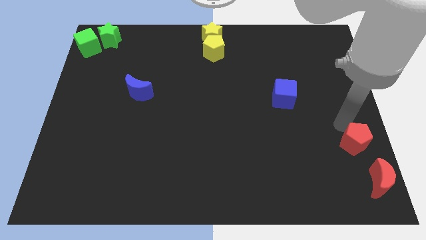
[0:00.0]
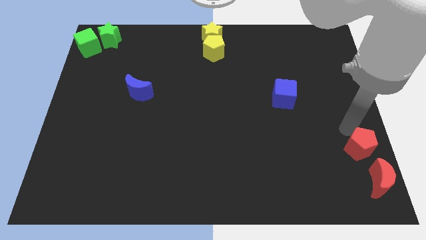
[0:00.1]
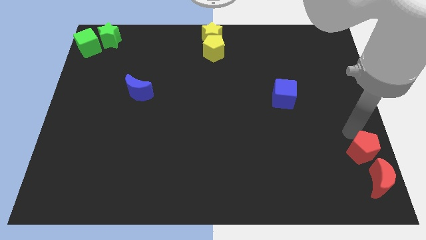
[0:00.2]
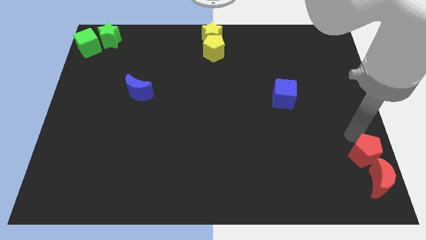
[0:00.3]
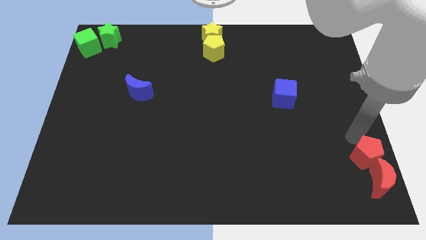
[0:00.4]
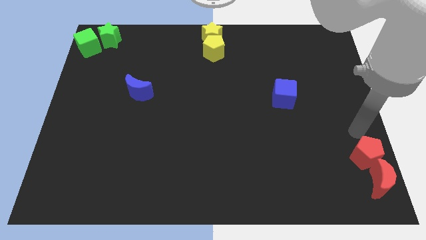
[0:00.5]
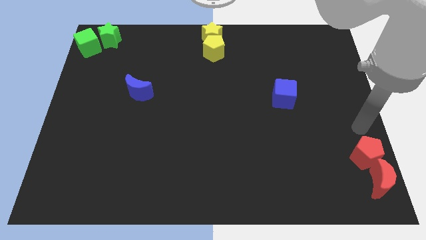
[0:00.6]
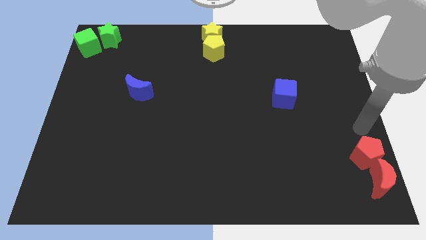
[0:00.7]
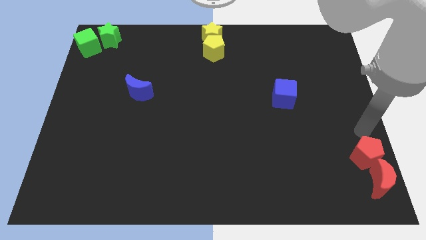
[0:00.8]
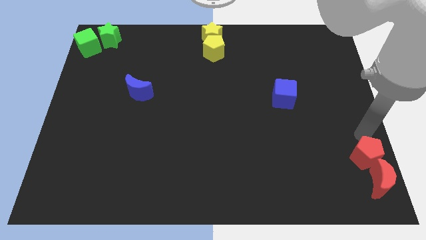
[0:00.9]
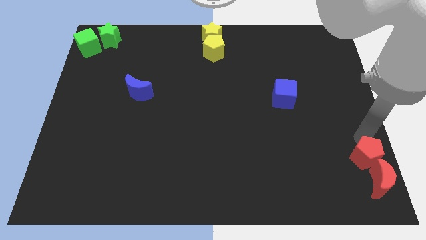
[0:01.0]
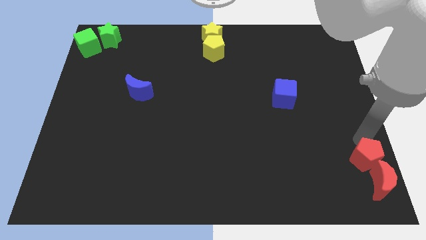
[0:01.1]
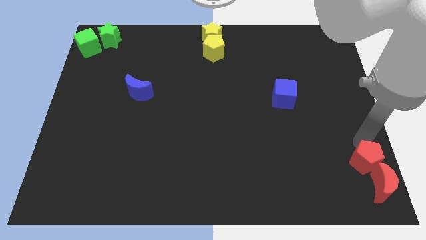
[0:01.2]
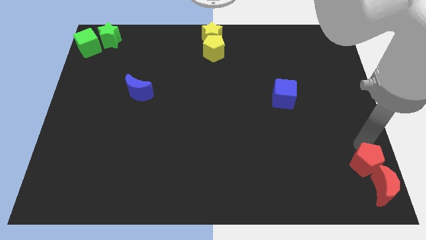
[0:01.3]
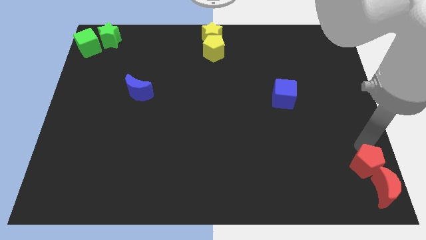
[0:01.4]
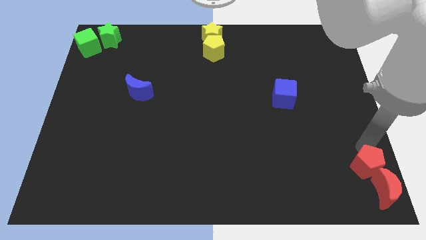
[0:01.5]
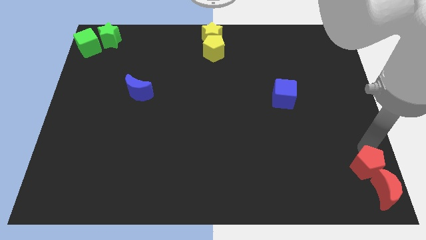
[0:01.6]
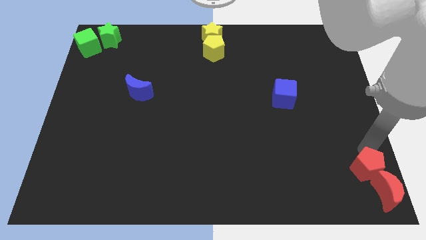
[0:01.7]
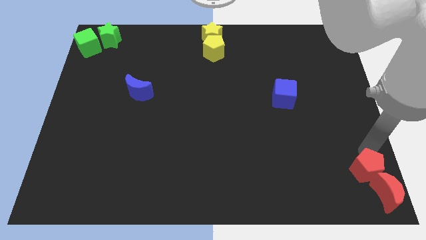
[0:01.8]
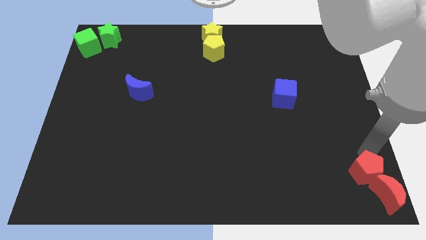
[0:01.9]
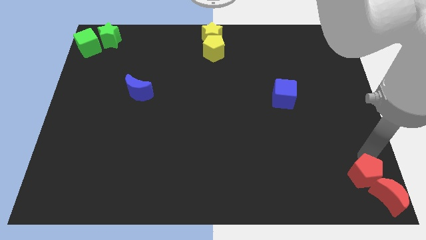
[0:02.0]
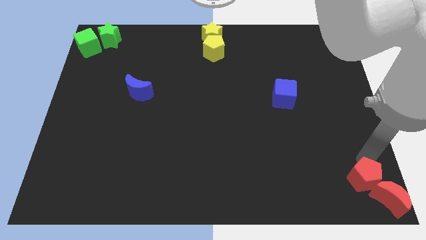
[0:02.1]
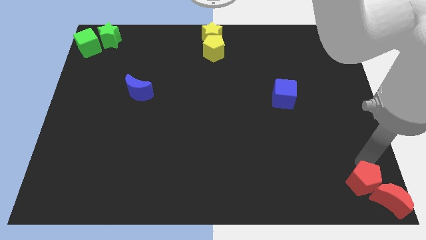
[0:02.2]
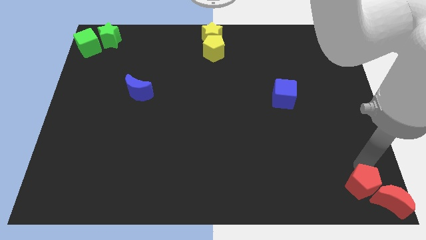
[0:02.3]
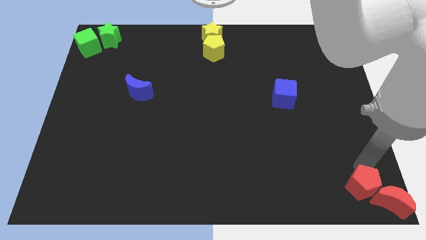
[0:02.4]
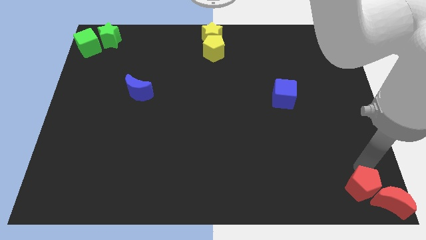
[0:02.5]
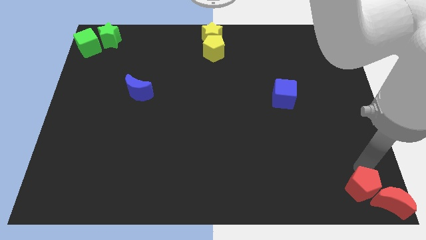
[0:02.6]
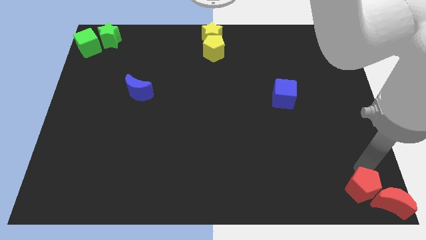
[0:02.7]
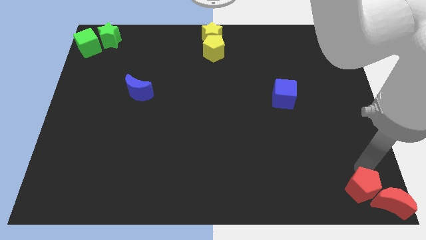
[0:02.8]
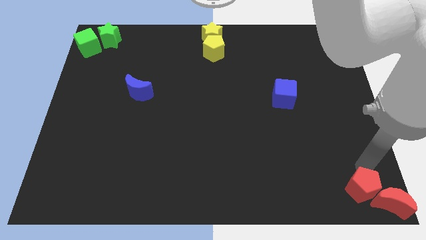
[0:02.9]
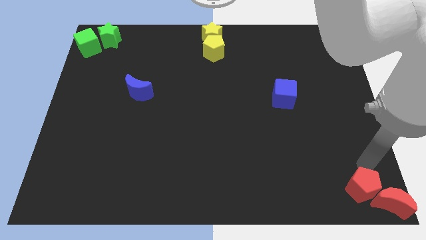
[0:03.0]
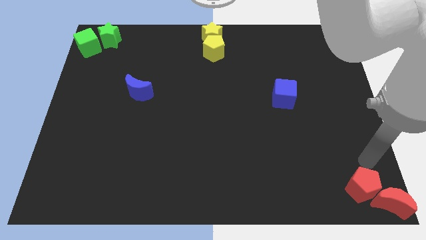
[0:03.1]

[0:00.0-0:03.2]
move slightly the red blocks to the bottom right side of the board

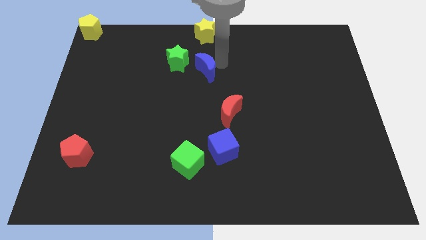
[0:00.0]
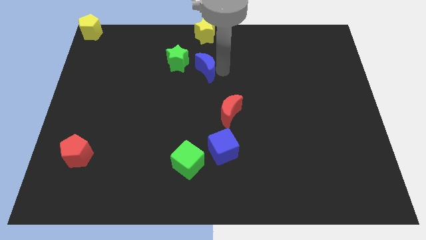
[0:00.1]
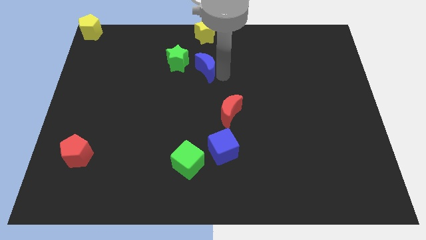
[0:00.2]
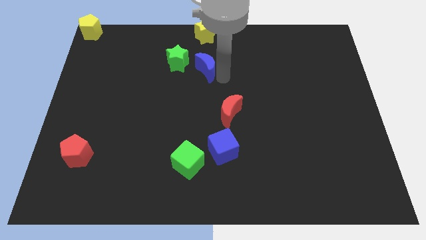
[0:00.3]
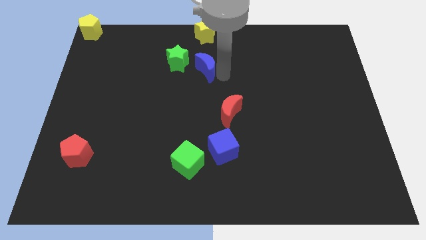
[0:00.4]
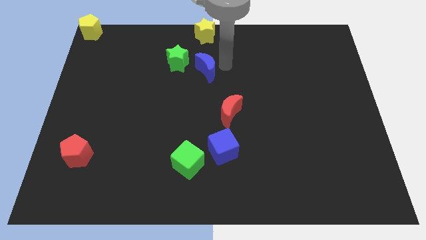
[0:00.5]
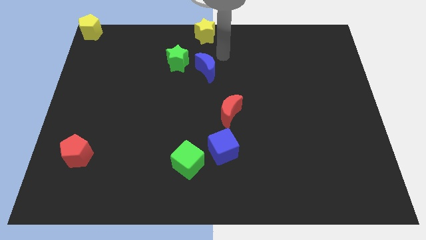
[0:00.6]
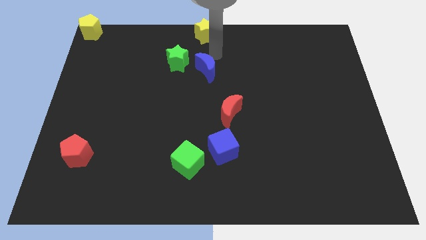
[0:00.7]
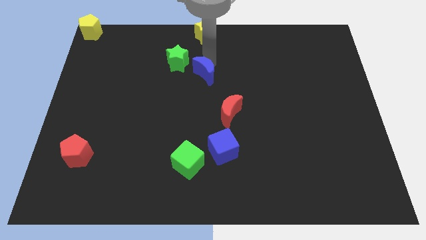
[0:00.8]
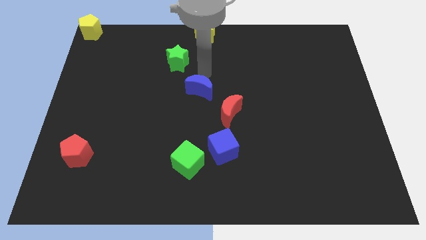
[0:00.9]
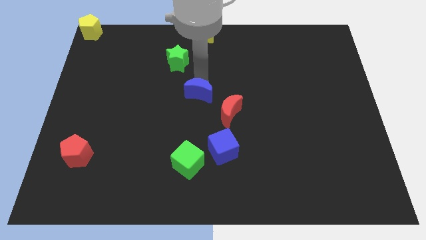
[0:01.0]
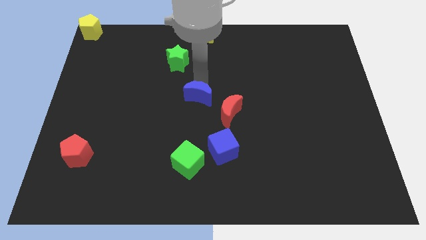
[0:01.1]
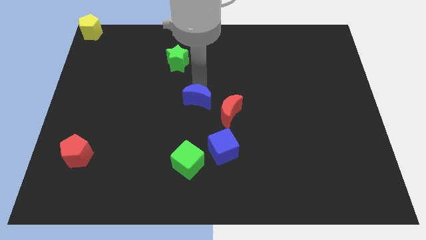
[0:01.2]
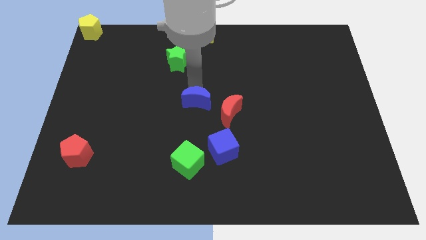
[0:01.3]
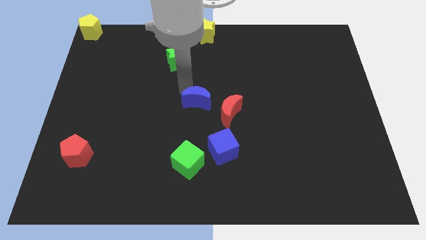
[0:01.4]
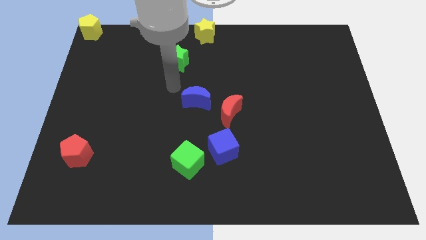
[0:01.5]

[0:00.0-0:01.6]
move the blue crescent to the center of the board

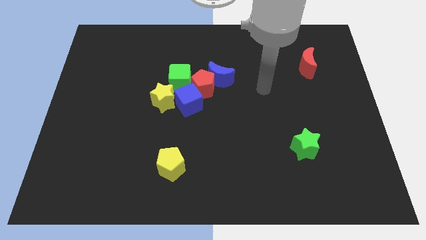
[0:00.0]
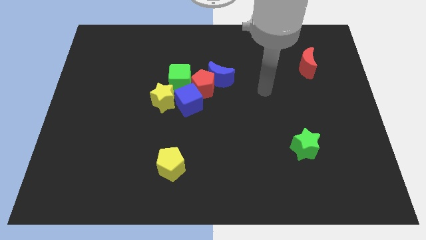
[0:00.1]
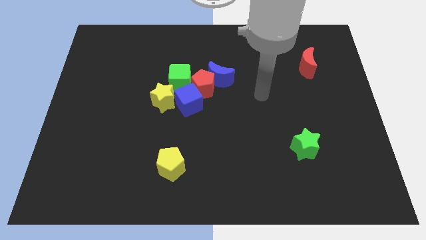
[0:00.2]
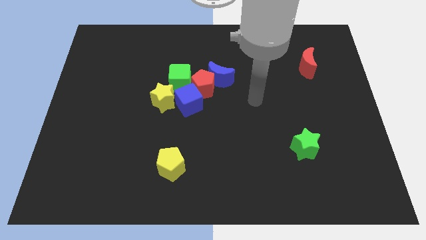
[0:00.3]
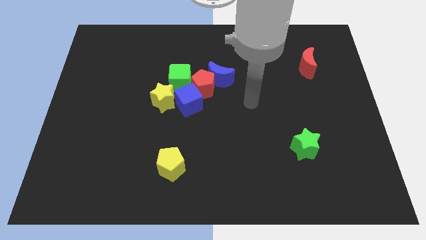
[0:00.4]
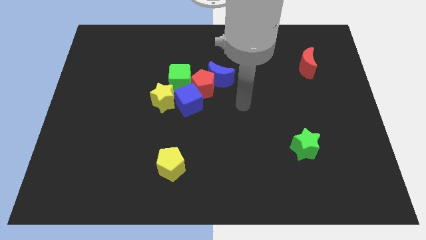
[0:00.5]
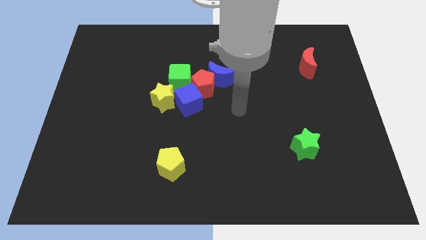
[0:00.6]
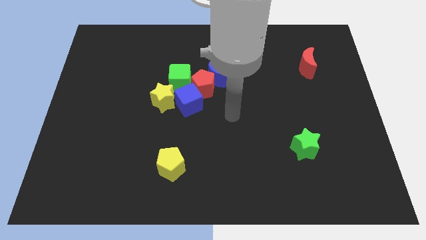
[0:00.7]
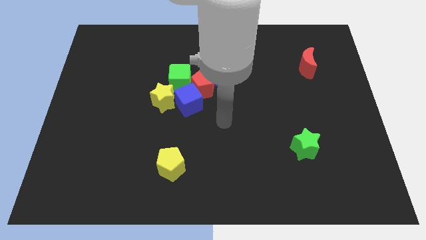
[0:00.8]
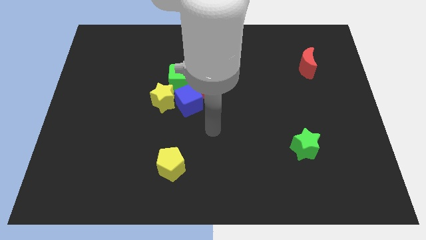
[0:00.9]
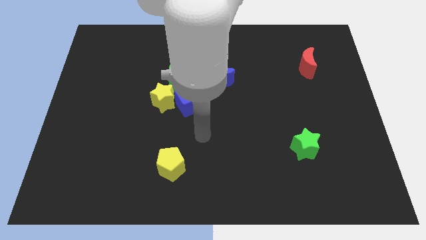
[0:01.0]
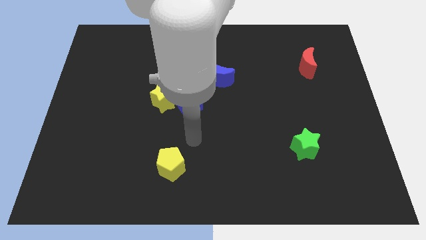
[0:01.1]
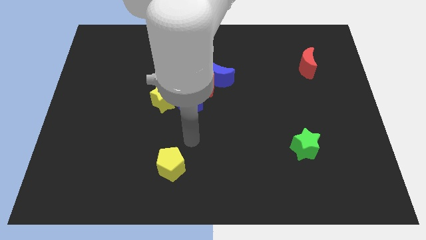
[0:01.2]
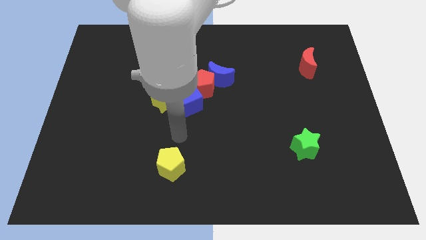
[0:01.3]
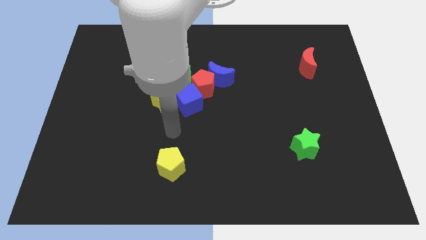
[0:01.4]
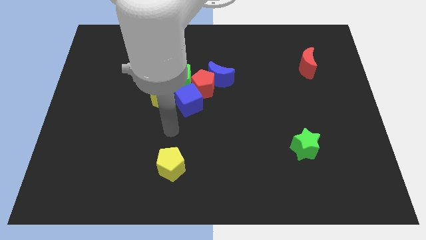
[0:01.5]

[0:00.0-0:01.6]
move your arm above the yellow pentagon

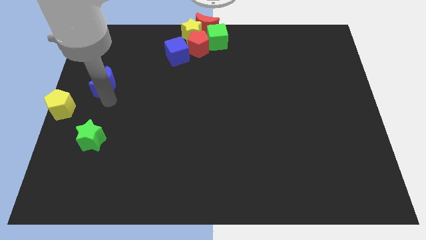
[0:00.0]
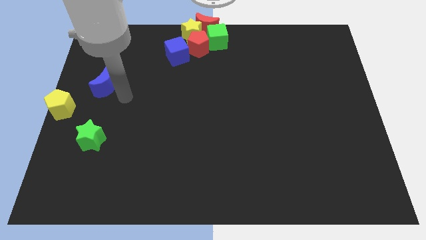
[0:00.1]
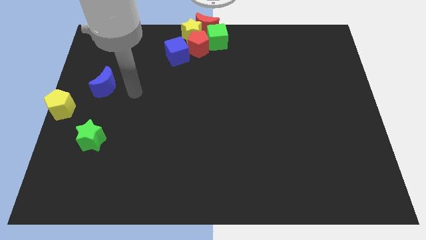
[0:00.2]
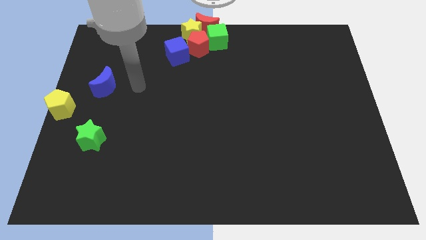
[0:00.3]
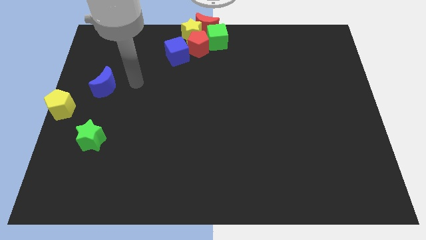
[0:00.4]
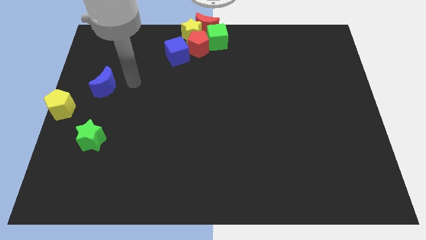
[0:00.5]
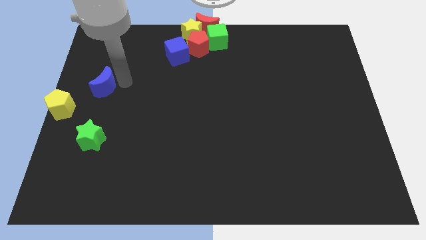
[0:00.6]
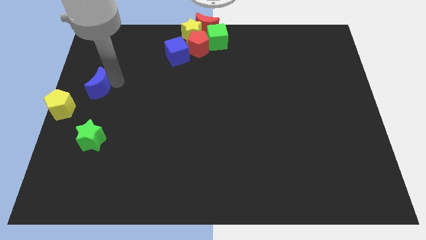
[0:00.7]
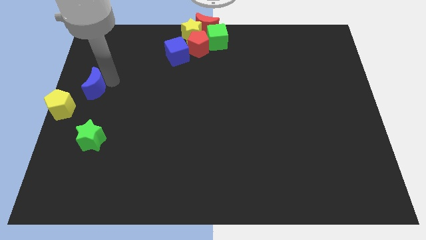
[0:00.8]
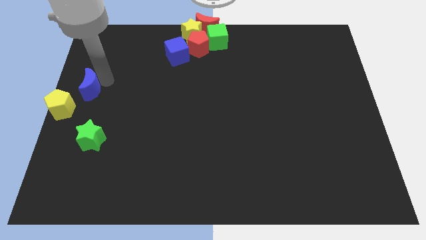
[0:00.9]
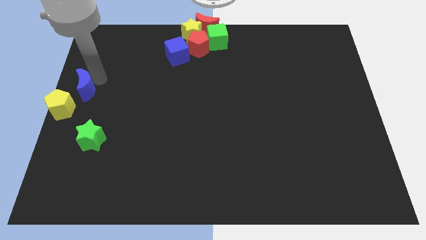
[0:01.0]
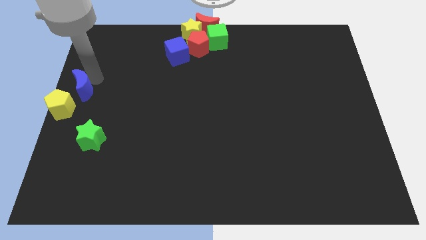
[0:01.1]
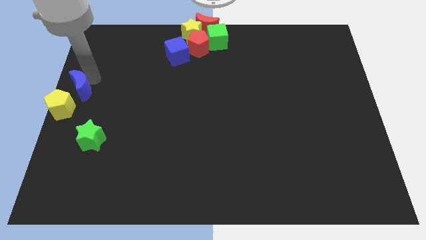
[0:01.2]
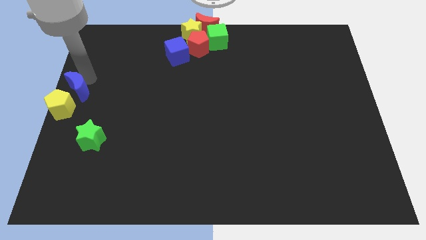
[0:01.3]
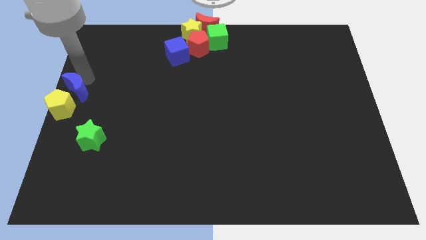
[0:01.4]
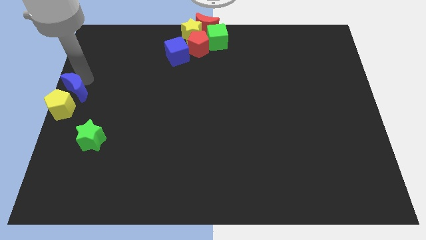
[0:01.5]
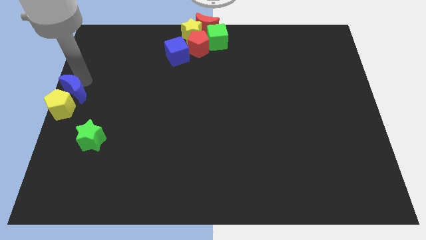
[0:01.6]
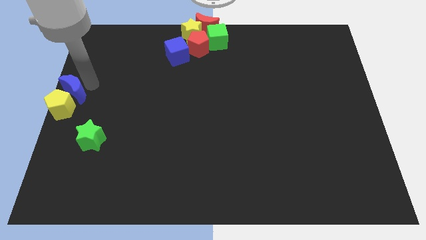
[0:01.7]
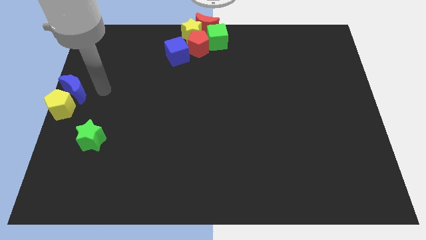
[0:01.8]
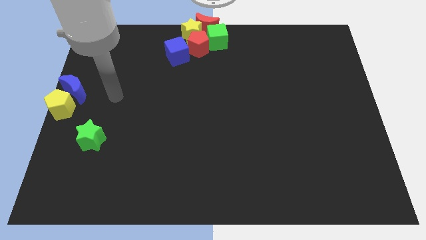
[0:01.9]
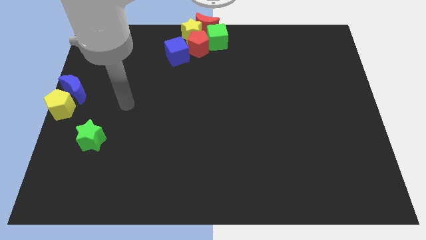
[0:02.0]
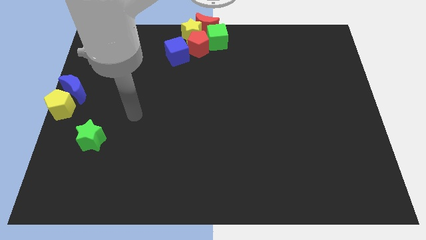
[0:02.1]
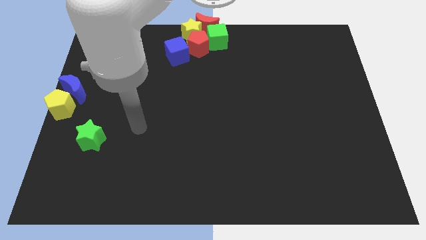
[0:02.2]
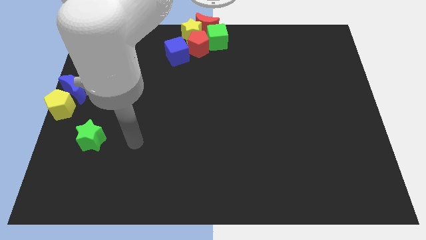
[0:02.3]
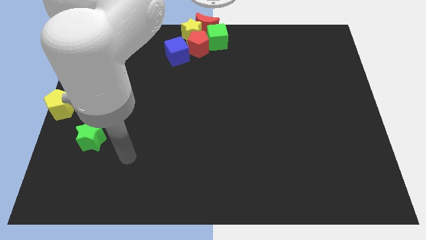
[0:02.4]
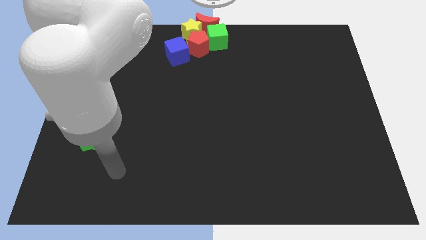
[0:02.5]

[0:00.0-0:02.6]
push blue crescent towards the yellow pentagon
